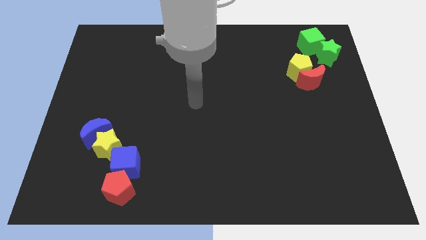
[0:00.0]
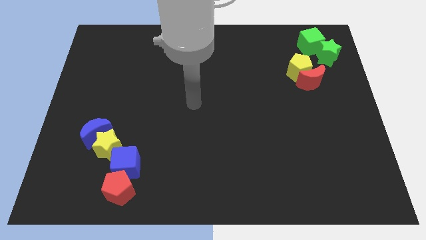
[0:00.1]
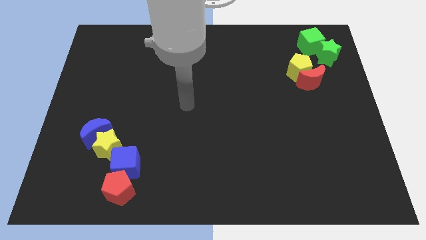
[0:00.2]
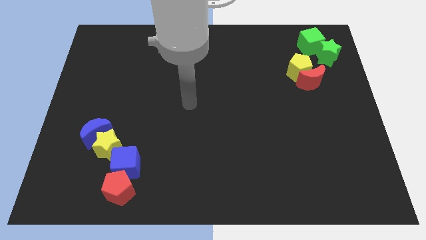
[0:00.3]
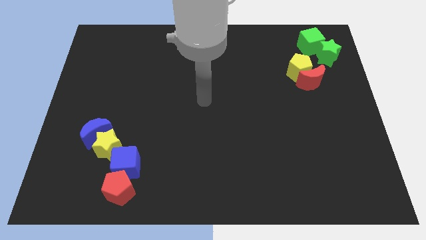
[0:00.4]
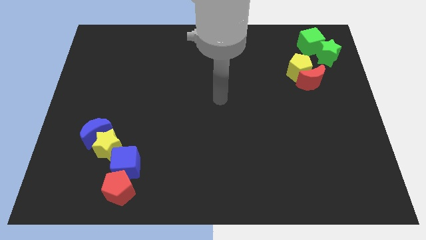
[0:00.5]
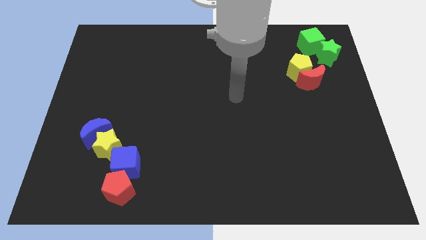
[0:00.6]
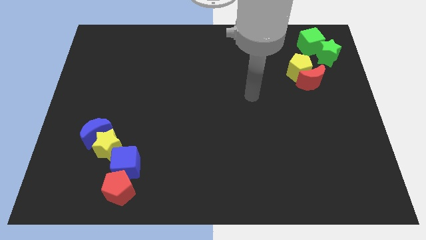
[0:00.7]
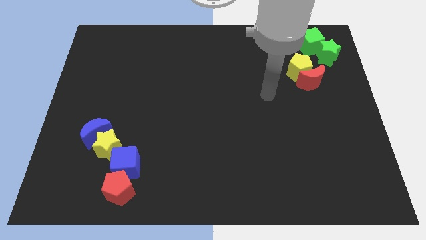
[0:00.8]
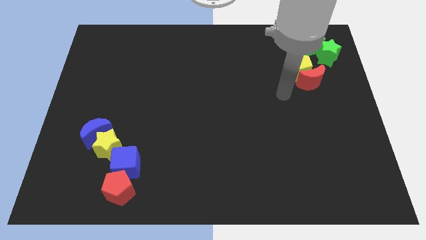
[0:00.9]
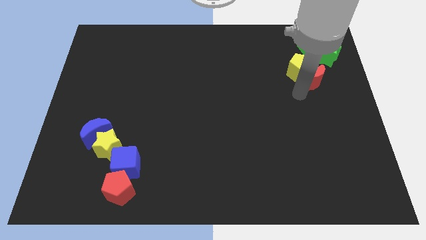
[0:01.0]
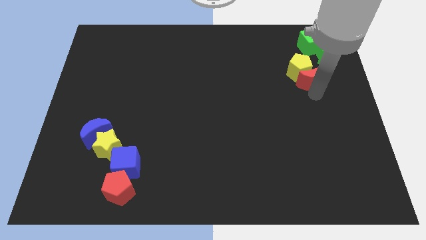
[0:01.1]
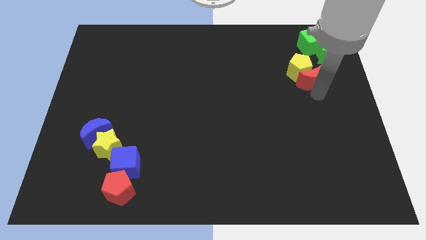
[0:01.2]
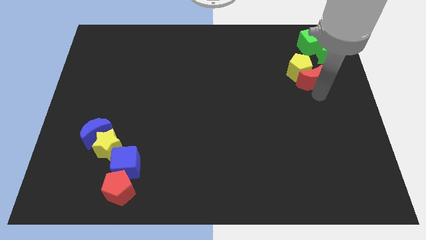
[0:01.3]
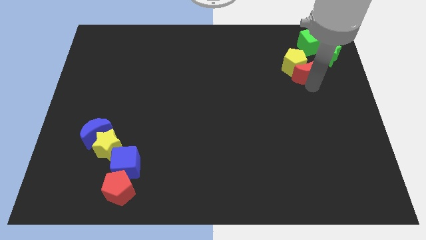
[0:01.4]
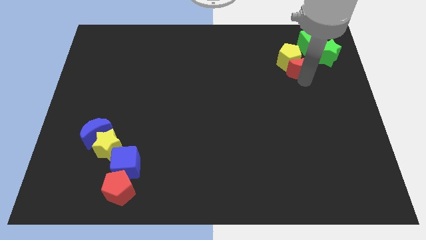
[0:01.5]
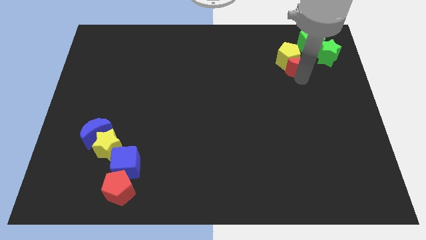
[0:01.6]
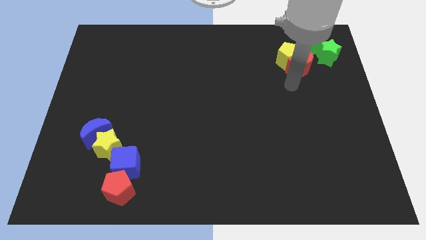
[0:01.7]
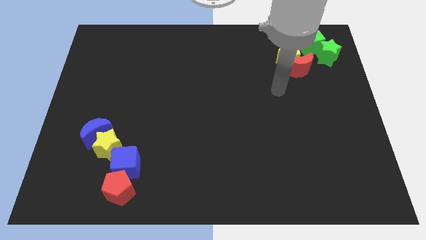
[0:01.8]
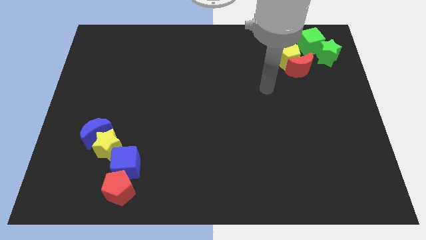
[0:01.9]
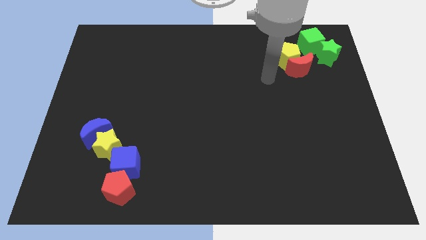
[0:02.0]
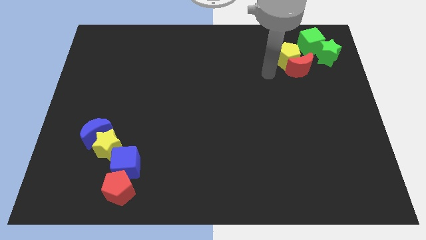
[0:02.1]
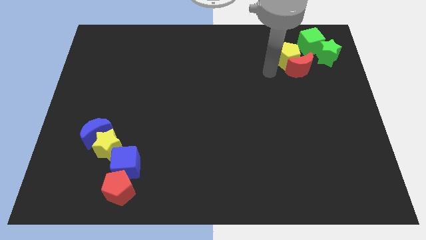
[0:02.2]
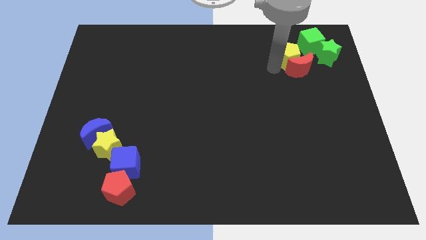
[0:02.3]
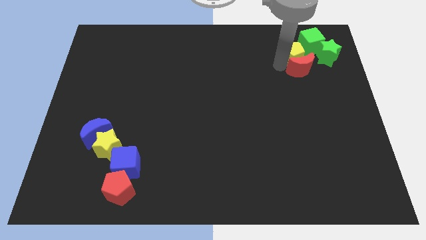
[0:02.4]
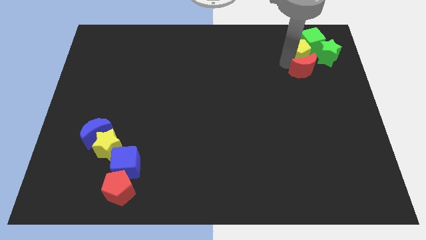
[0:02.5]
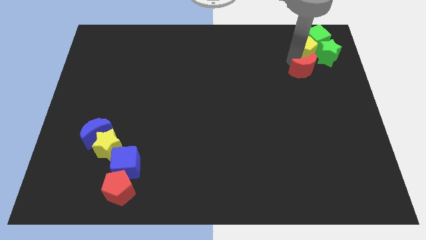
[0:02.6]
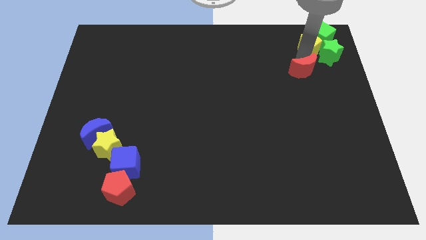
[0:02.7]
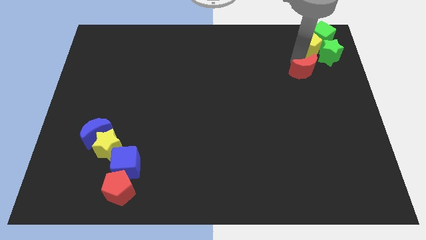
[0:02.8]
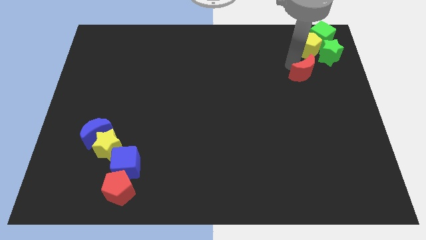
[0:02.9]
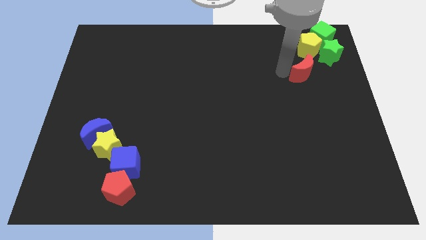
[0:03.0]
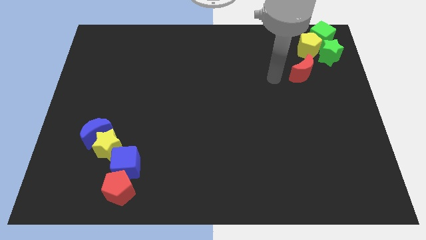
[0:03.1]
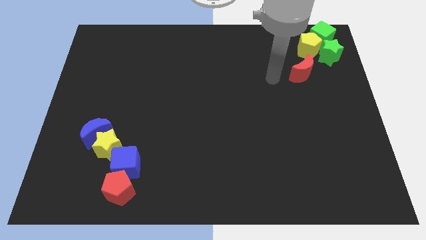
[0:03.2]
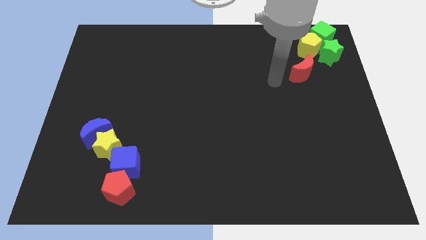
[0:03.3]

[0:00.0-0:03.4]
put the yellow pentagon and green cube together

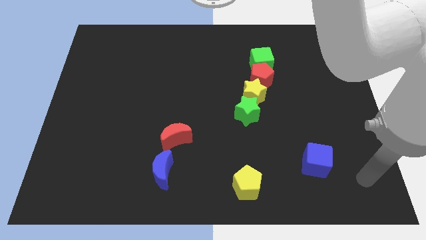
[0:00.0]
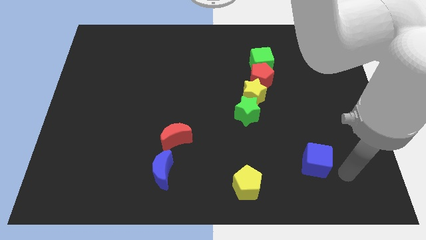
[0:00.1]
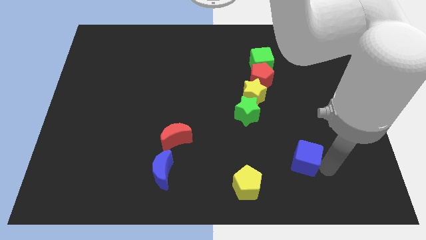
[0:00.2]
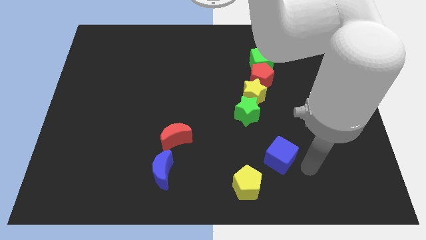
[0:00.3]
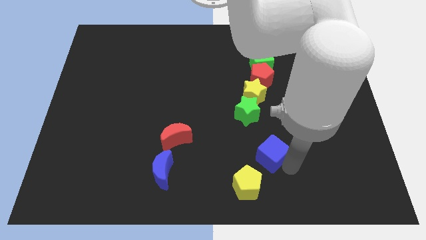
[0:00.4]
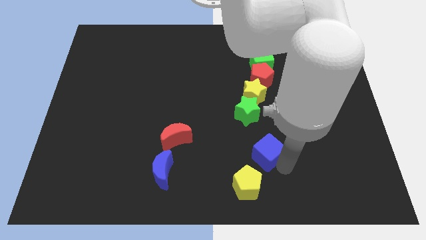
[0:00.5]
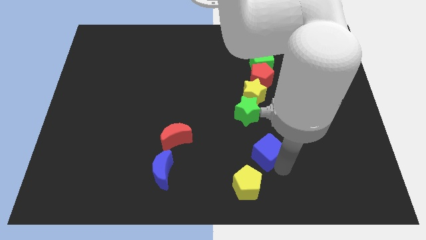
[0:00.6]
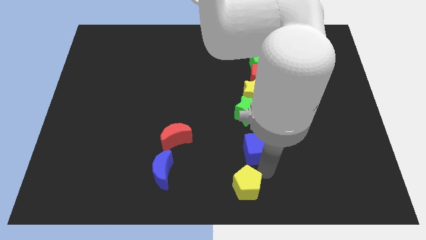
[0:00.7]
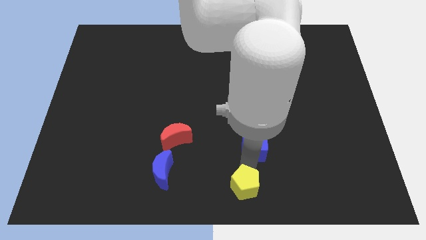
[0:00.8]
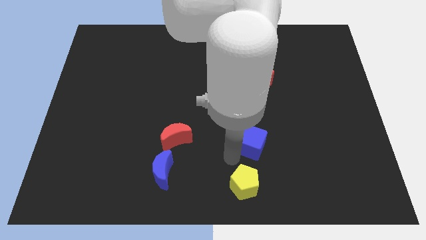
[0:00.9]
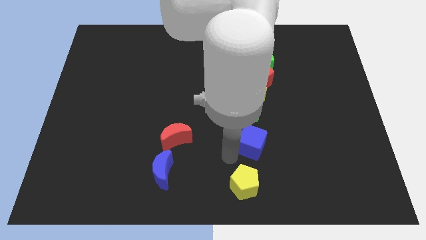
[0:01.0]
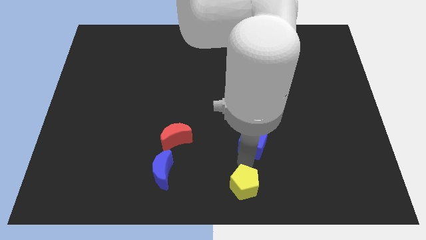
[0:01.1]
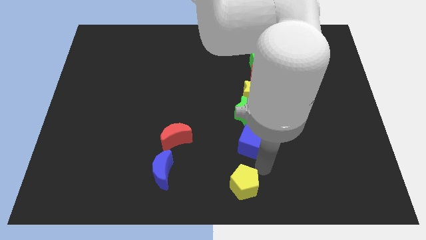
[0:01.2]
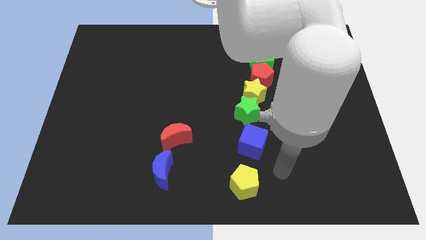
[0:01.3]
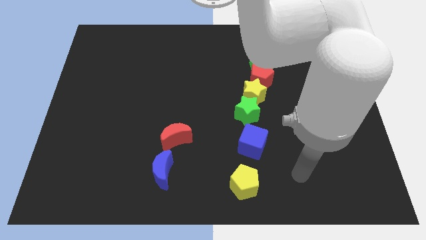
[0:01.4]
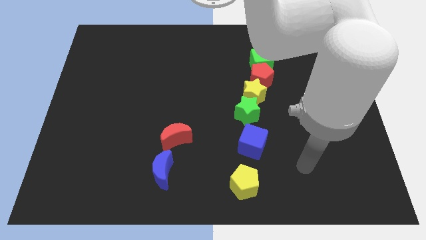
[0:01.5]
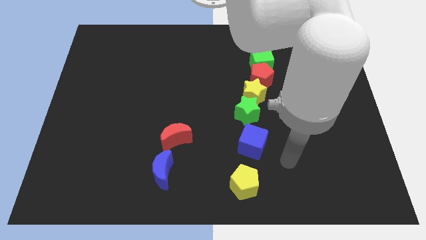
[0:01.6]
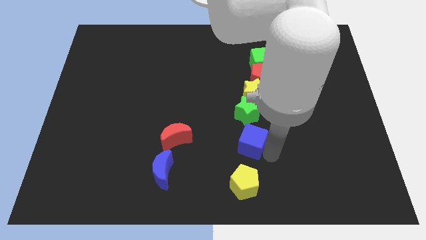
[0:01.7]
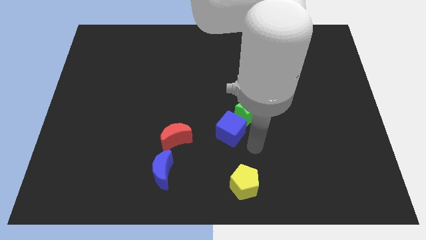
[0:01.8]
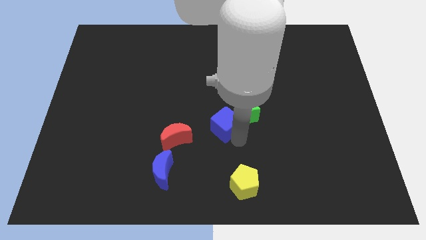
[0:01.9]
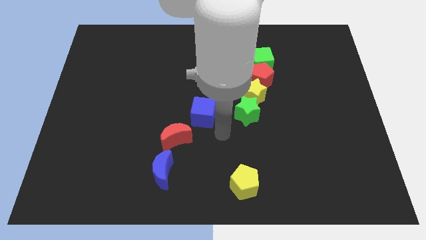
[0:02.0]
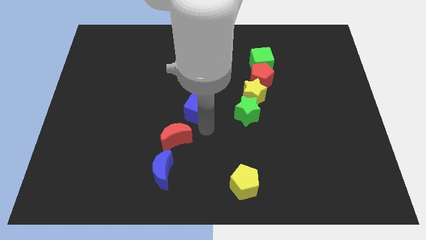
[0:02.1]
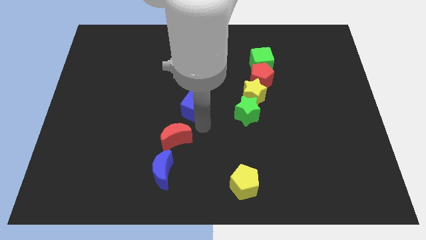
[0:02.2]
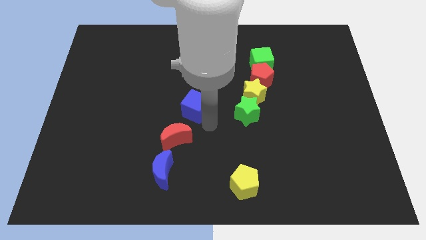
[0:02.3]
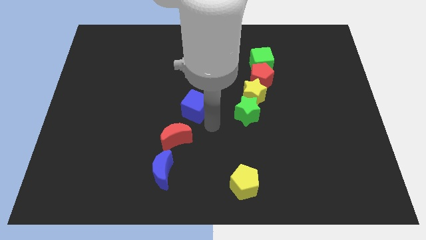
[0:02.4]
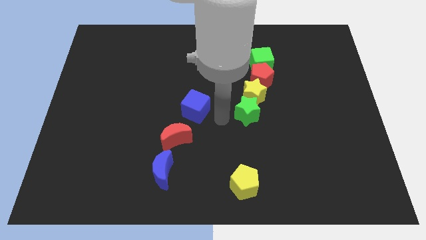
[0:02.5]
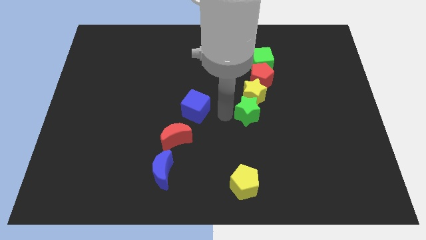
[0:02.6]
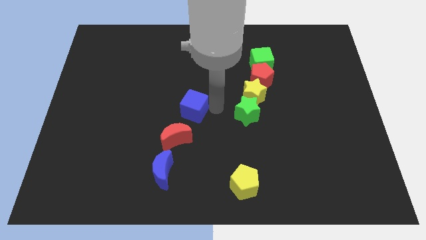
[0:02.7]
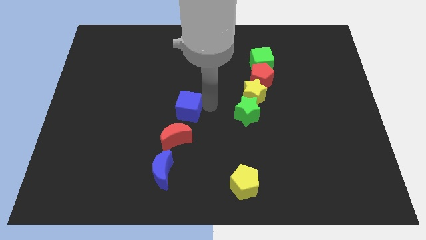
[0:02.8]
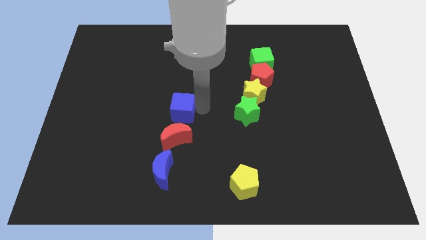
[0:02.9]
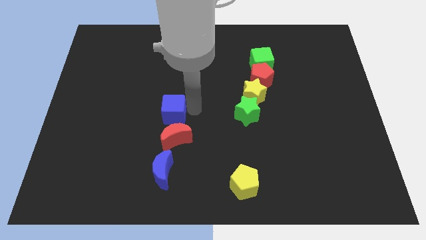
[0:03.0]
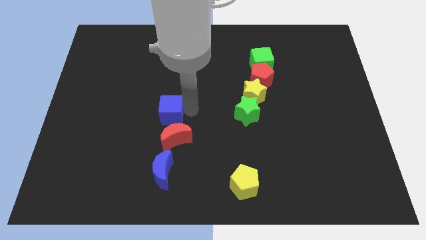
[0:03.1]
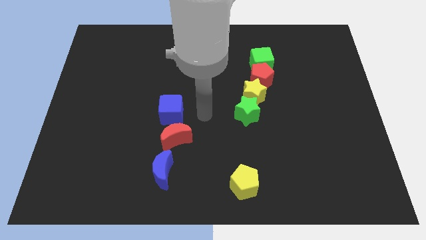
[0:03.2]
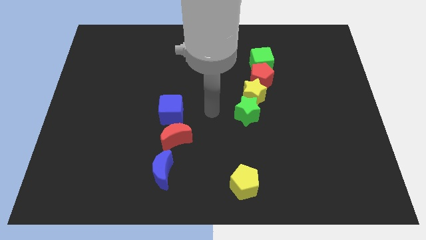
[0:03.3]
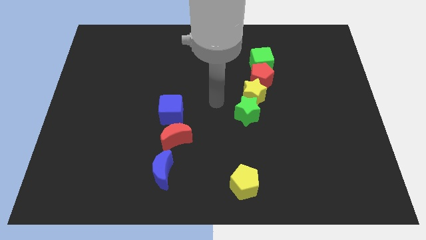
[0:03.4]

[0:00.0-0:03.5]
move the blue cube to the top side of the red moon

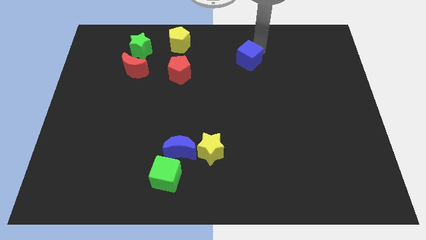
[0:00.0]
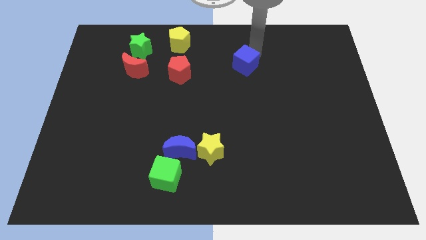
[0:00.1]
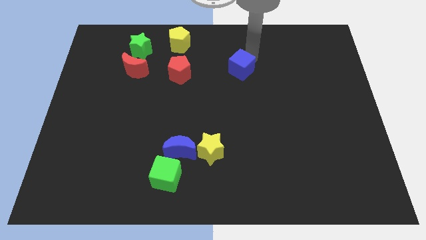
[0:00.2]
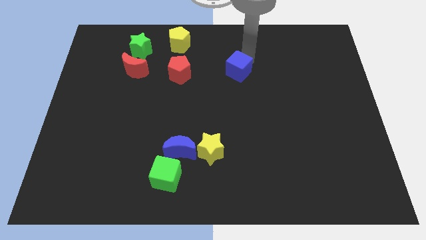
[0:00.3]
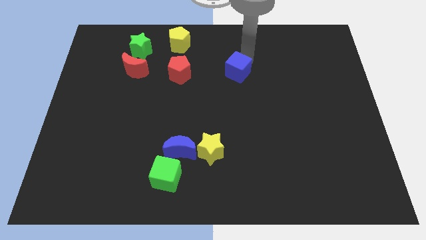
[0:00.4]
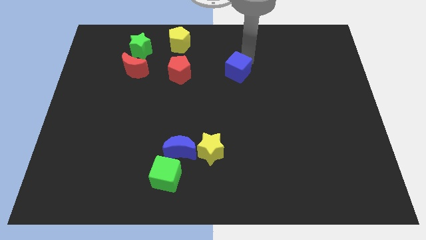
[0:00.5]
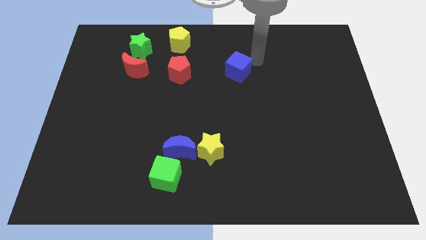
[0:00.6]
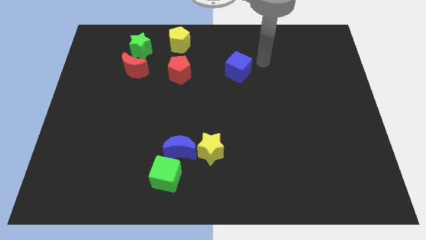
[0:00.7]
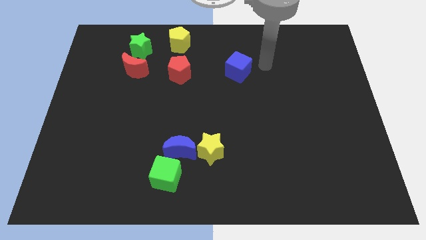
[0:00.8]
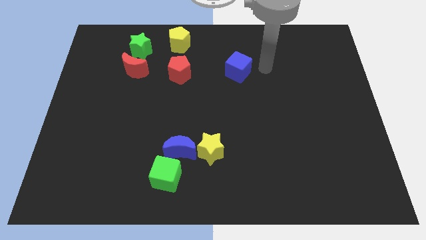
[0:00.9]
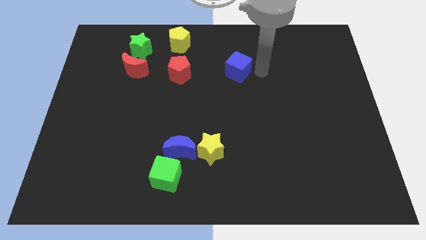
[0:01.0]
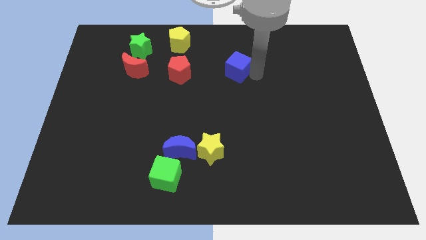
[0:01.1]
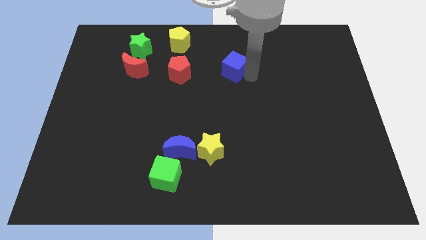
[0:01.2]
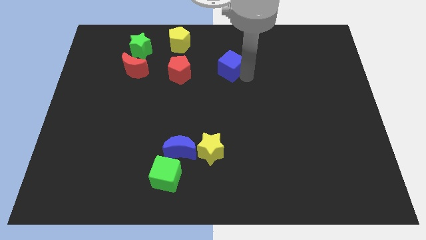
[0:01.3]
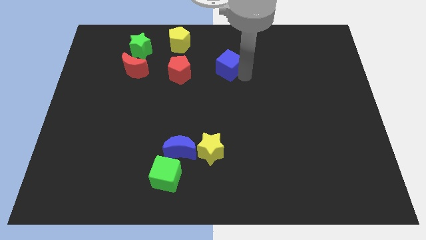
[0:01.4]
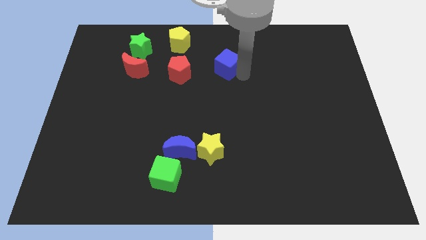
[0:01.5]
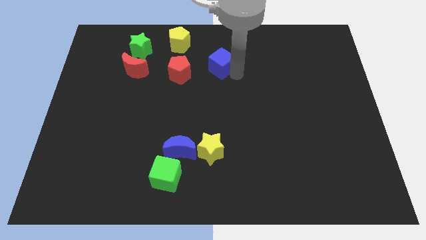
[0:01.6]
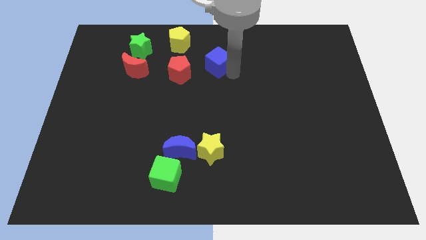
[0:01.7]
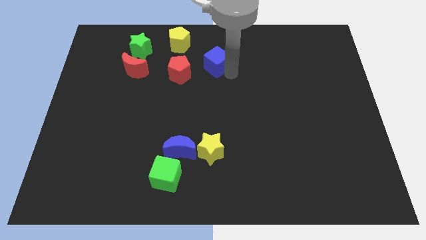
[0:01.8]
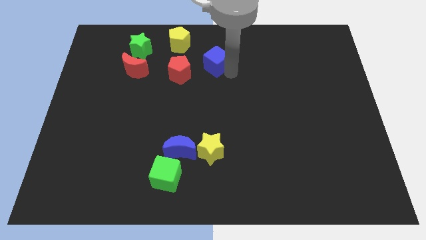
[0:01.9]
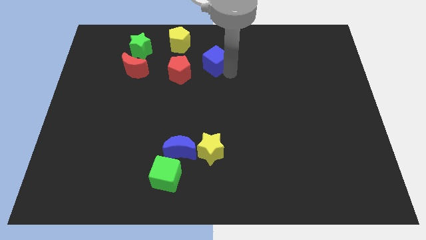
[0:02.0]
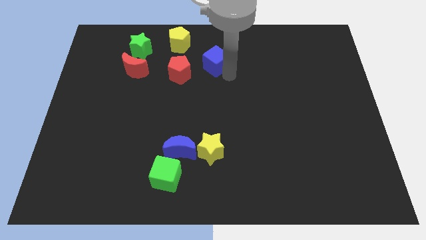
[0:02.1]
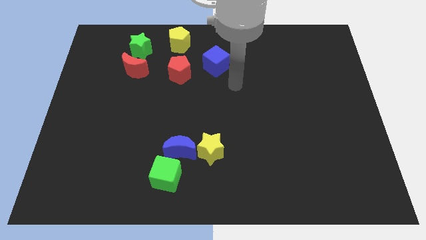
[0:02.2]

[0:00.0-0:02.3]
place the blue cube to the right of the red pentagon pentagon
